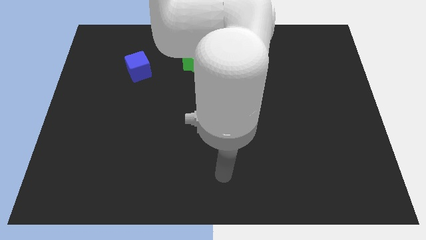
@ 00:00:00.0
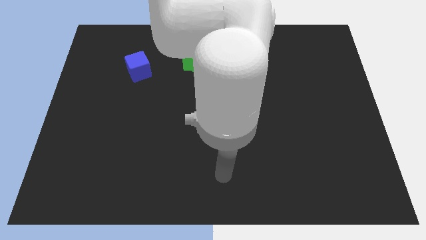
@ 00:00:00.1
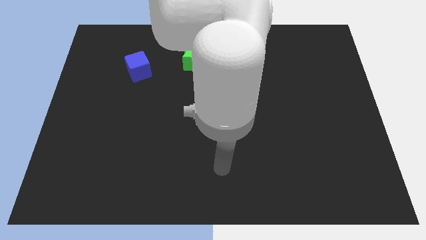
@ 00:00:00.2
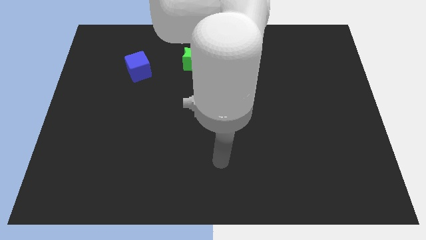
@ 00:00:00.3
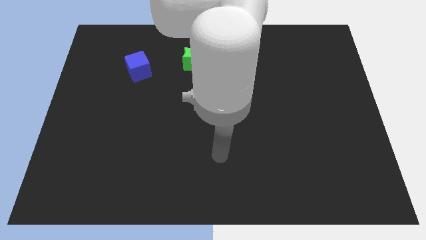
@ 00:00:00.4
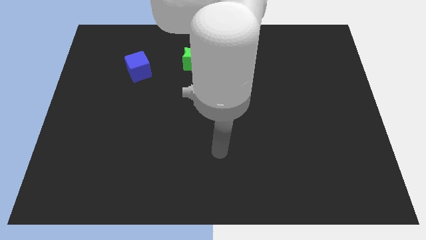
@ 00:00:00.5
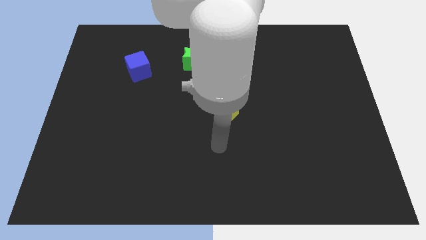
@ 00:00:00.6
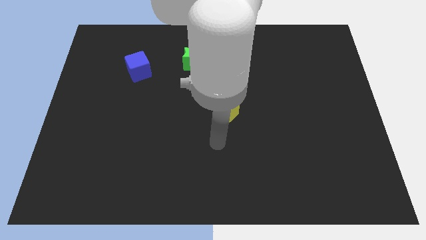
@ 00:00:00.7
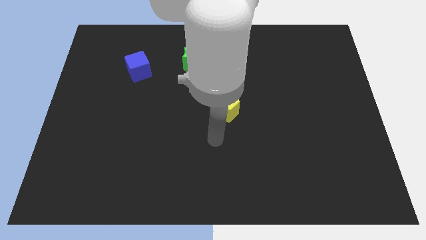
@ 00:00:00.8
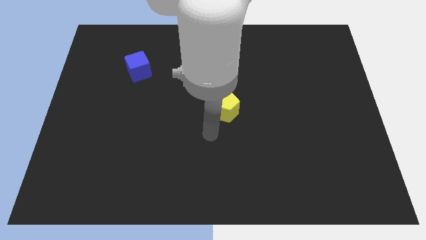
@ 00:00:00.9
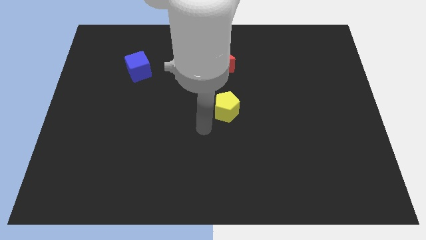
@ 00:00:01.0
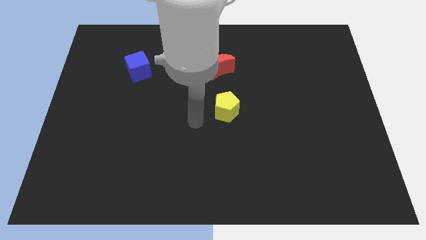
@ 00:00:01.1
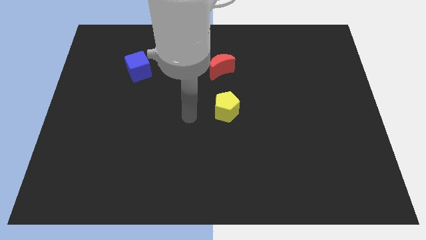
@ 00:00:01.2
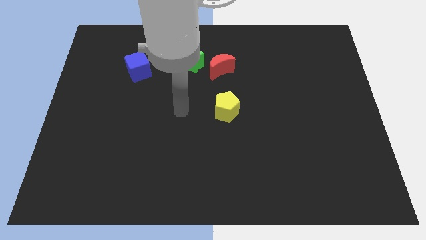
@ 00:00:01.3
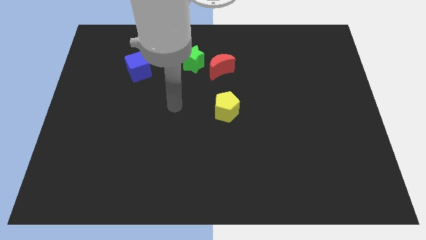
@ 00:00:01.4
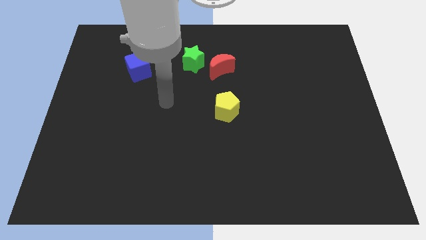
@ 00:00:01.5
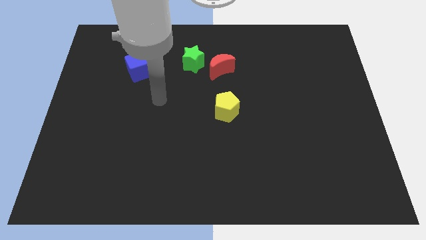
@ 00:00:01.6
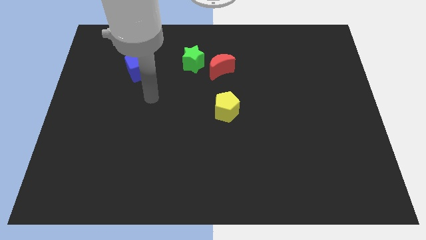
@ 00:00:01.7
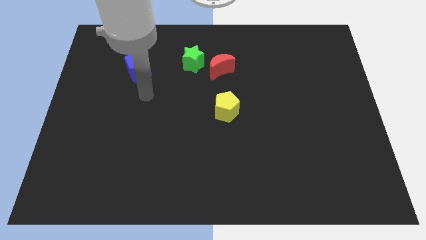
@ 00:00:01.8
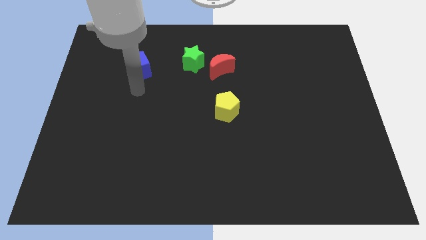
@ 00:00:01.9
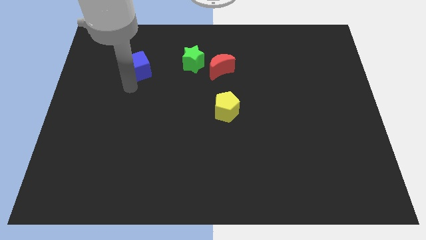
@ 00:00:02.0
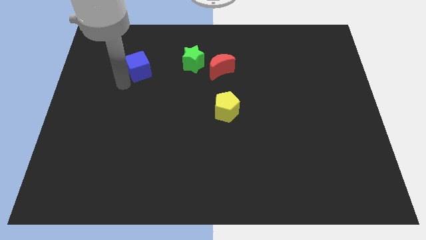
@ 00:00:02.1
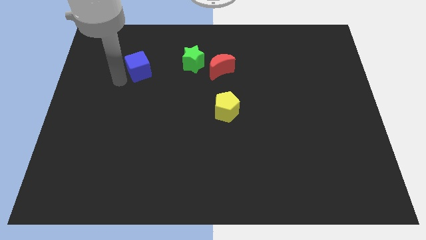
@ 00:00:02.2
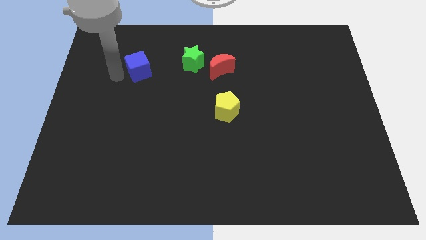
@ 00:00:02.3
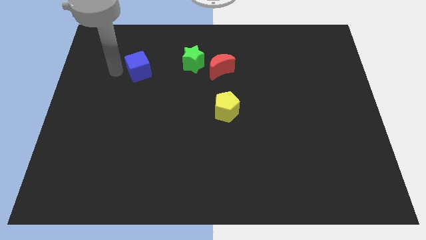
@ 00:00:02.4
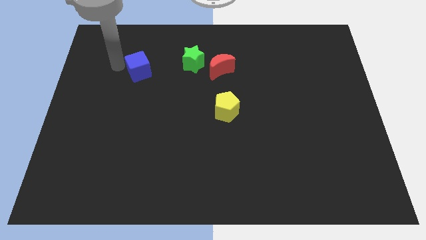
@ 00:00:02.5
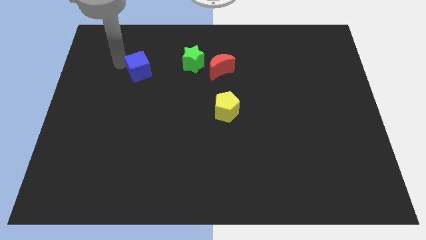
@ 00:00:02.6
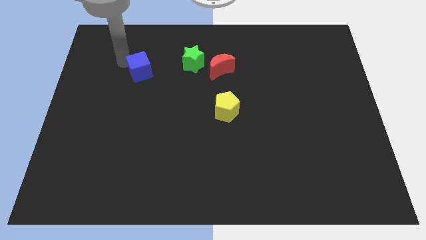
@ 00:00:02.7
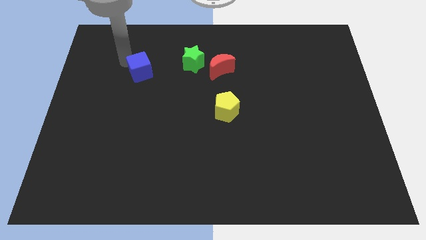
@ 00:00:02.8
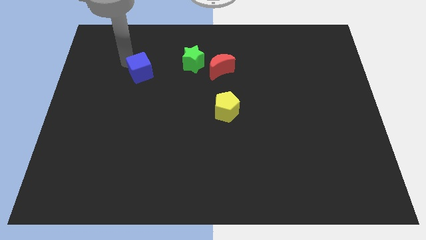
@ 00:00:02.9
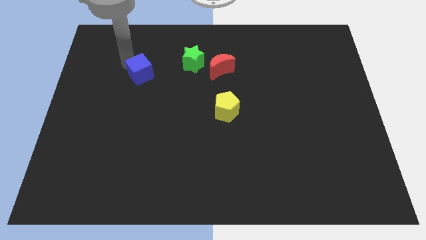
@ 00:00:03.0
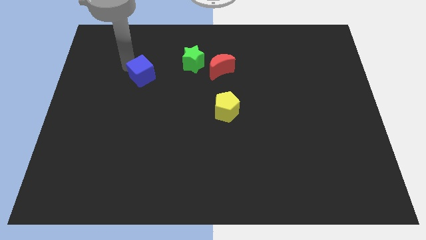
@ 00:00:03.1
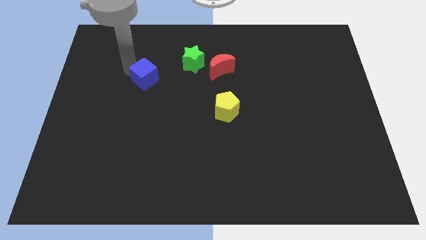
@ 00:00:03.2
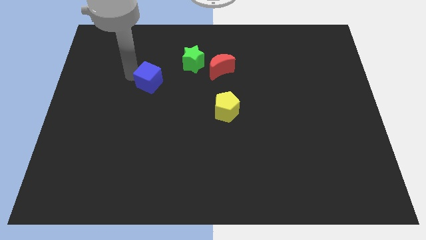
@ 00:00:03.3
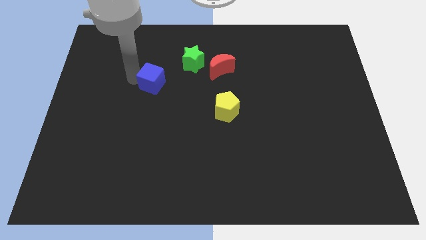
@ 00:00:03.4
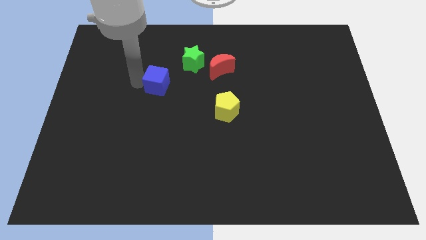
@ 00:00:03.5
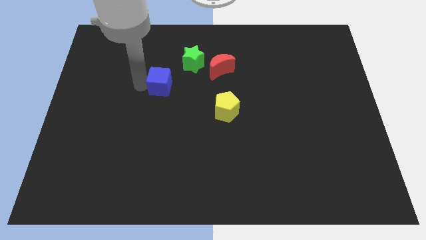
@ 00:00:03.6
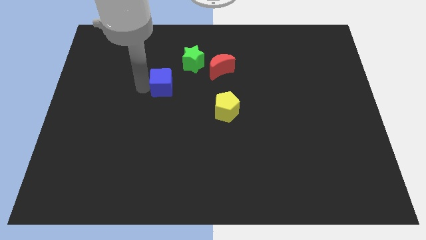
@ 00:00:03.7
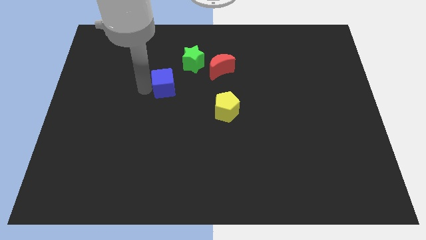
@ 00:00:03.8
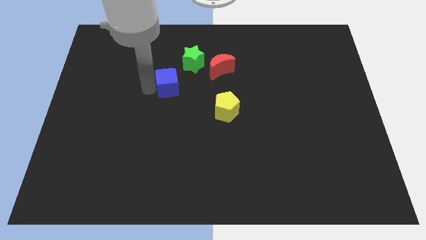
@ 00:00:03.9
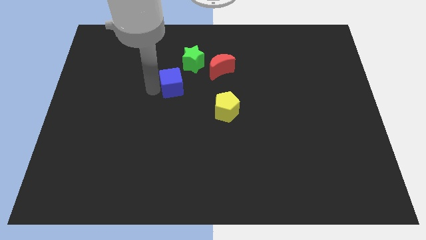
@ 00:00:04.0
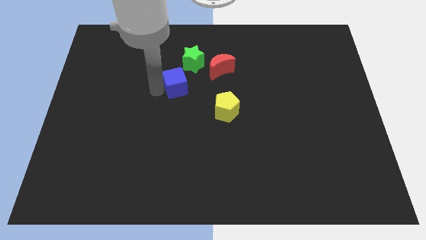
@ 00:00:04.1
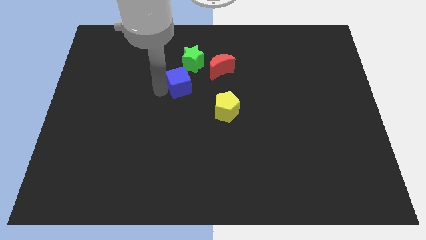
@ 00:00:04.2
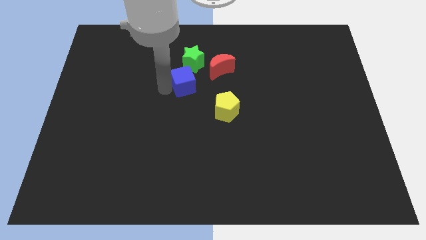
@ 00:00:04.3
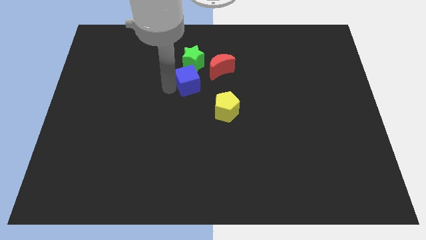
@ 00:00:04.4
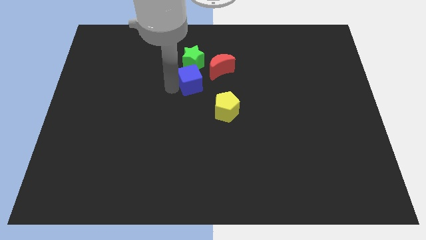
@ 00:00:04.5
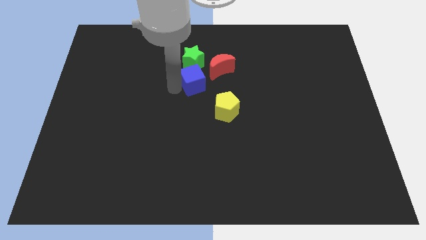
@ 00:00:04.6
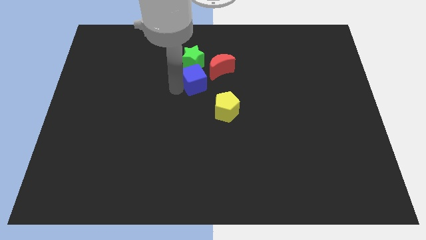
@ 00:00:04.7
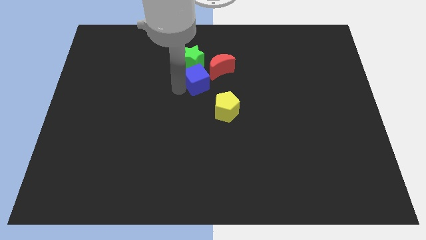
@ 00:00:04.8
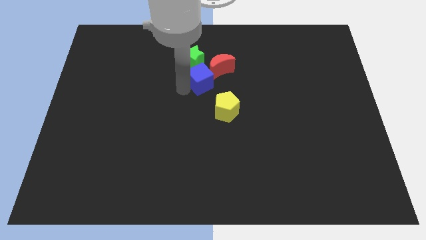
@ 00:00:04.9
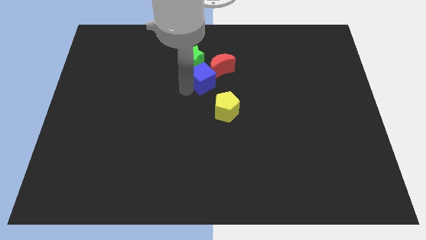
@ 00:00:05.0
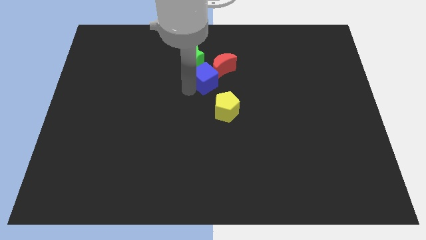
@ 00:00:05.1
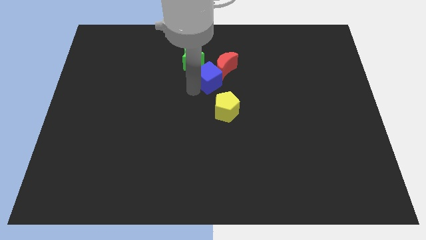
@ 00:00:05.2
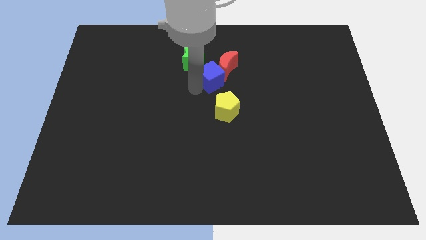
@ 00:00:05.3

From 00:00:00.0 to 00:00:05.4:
push the cube close to the red block

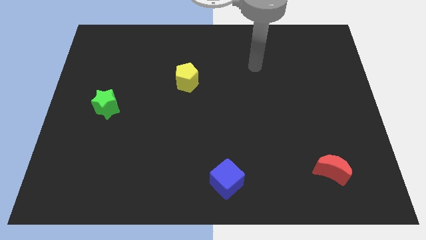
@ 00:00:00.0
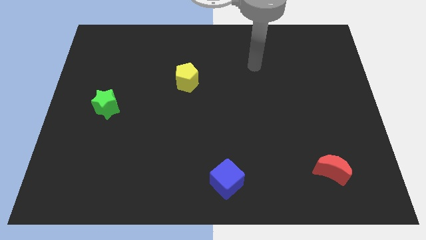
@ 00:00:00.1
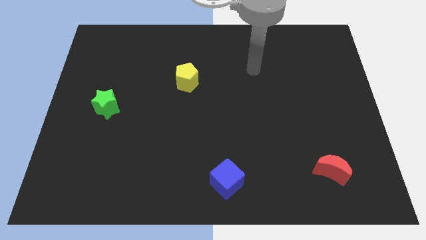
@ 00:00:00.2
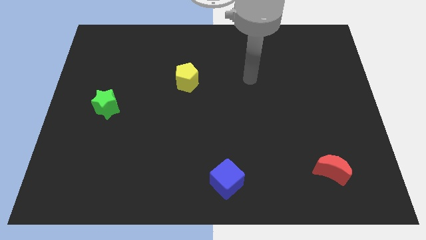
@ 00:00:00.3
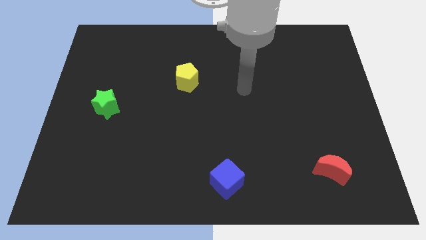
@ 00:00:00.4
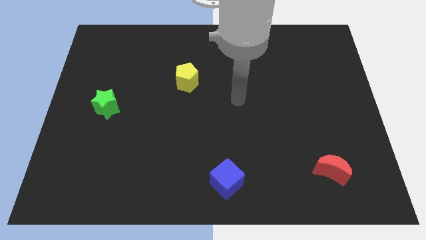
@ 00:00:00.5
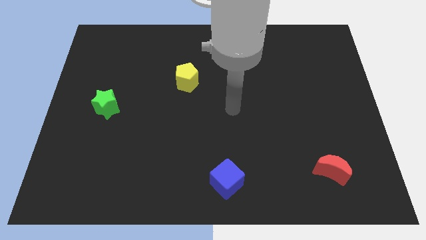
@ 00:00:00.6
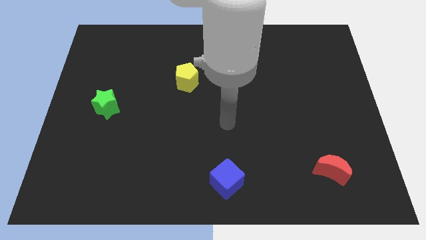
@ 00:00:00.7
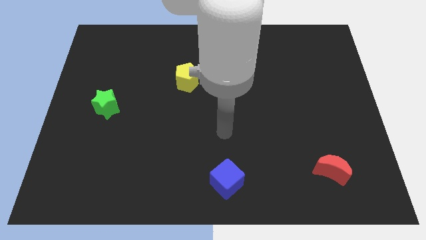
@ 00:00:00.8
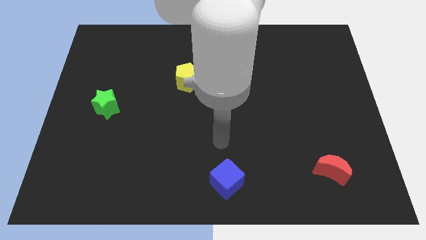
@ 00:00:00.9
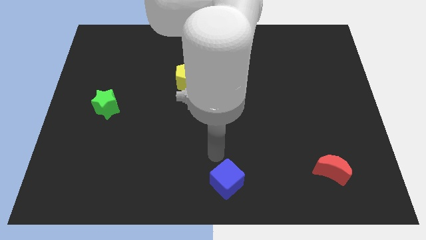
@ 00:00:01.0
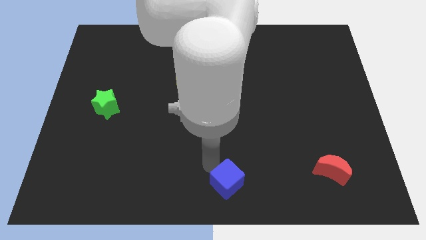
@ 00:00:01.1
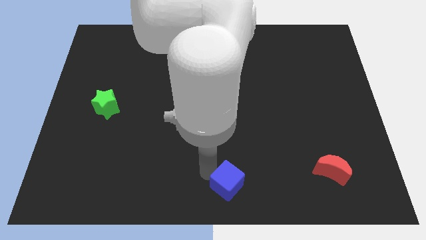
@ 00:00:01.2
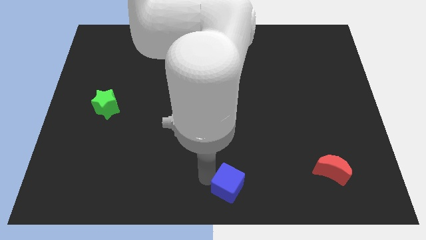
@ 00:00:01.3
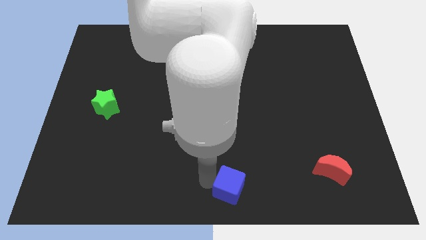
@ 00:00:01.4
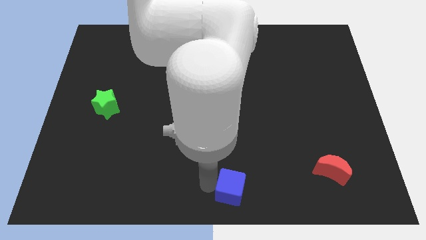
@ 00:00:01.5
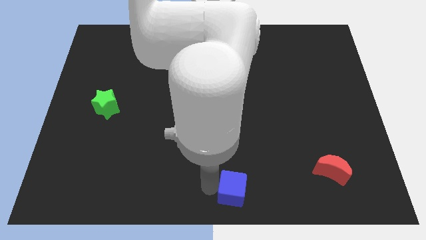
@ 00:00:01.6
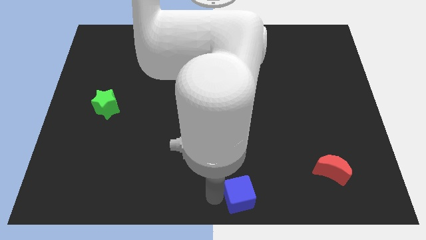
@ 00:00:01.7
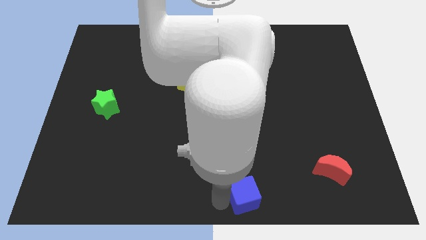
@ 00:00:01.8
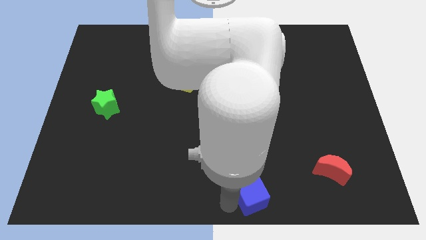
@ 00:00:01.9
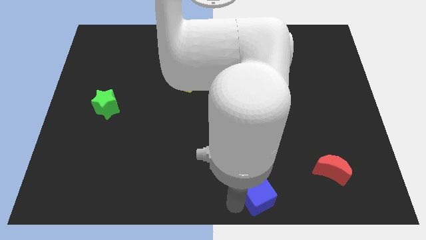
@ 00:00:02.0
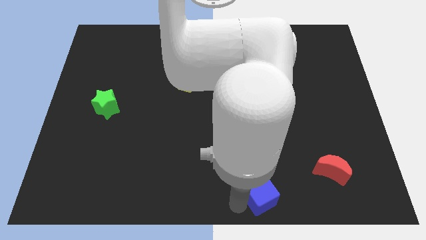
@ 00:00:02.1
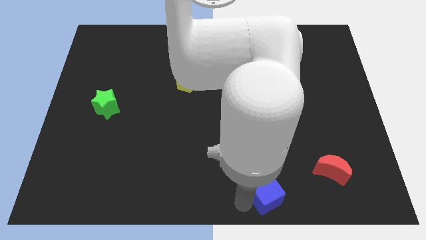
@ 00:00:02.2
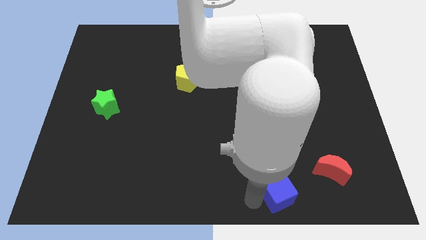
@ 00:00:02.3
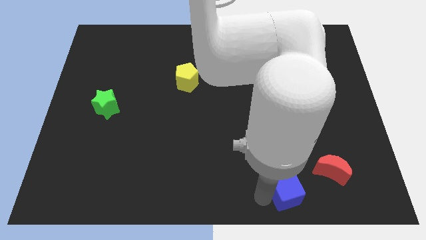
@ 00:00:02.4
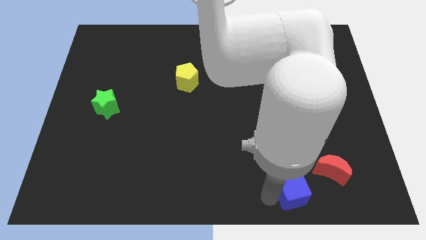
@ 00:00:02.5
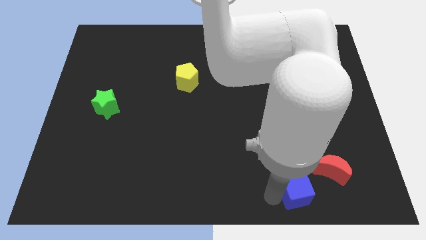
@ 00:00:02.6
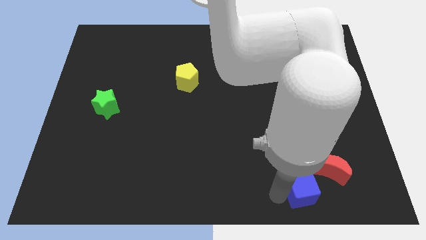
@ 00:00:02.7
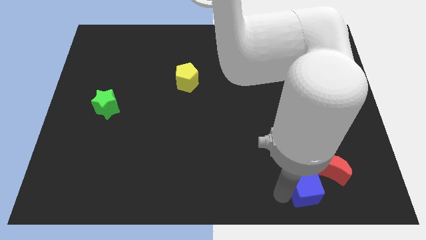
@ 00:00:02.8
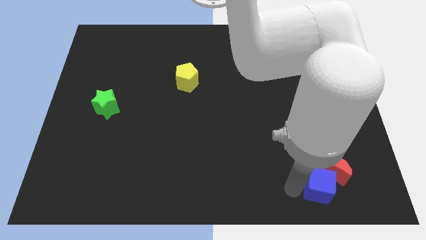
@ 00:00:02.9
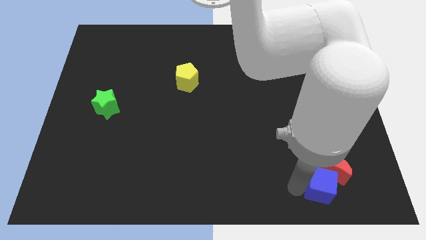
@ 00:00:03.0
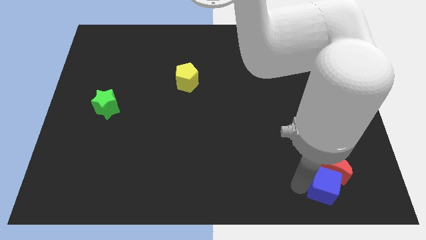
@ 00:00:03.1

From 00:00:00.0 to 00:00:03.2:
put the blue cube to the red moon
